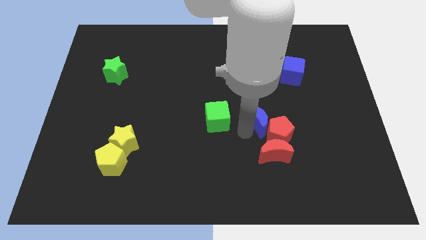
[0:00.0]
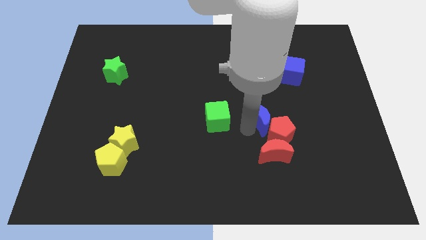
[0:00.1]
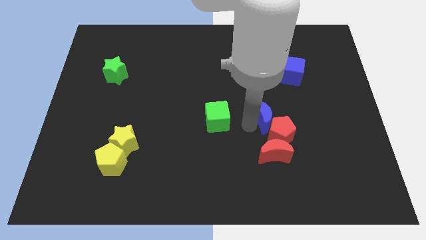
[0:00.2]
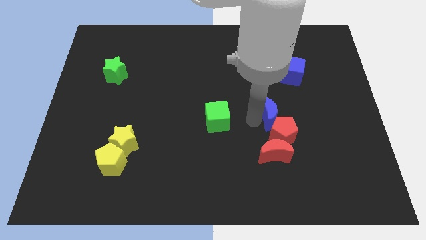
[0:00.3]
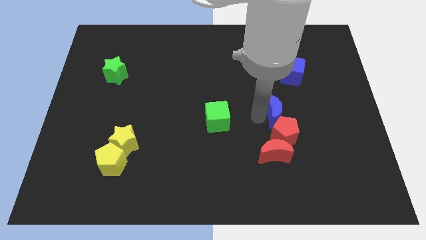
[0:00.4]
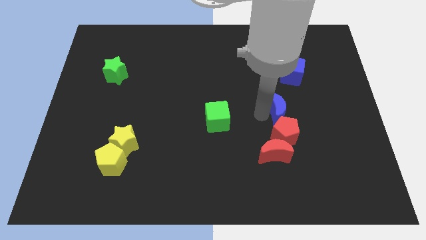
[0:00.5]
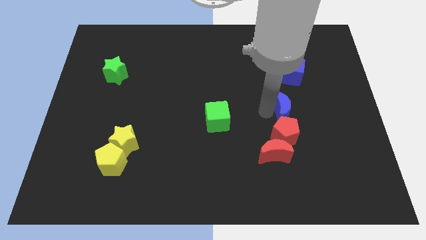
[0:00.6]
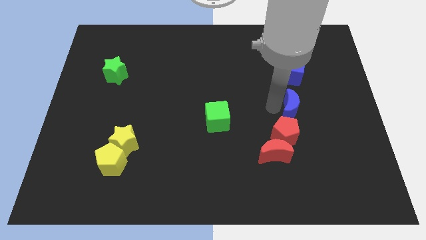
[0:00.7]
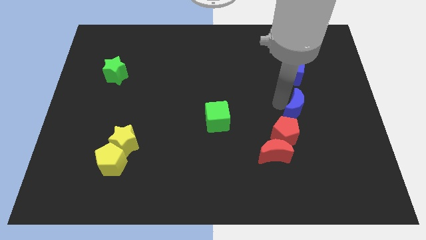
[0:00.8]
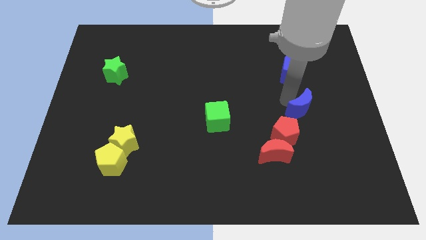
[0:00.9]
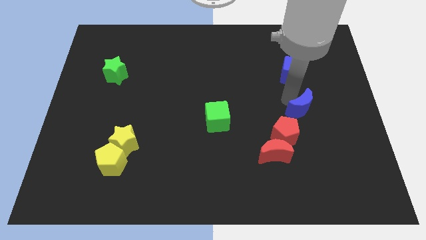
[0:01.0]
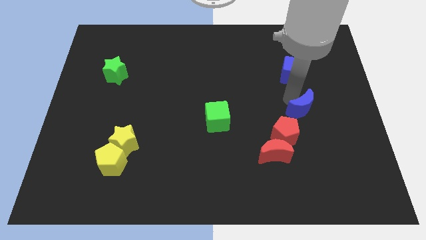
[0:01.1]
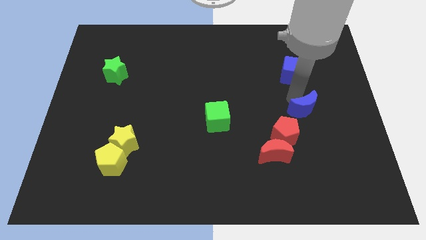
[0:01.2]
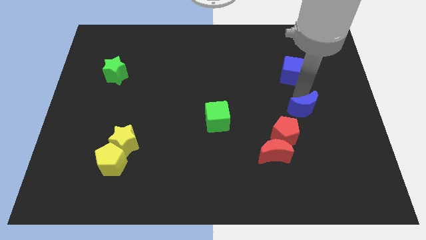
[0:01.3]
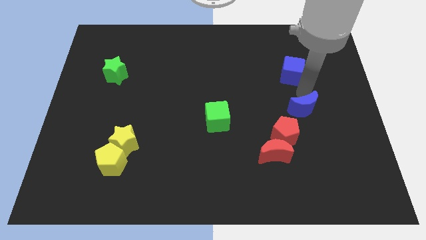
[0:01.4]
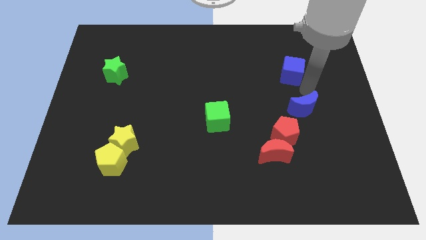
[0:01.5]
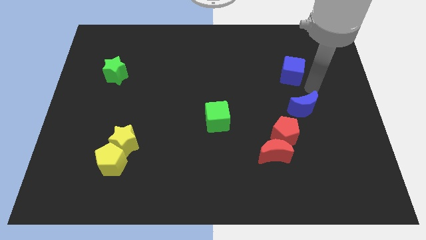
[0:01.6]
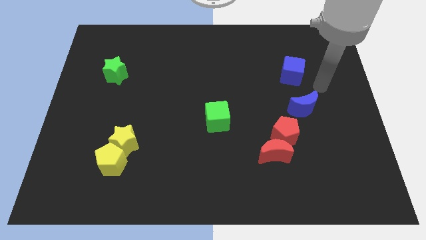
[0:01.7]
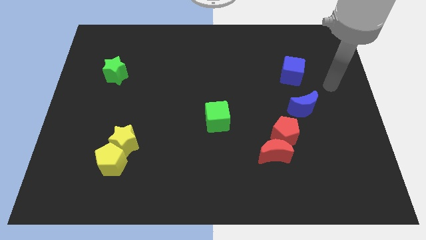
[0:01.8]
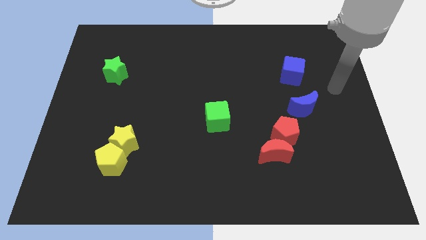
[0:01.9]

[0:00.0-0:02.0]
move the blue crescent towards right

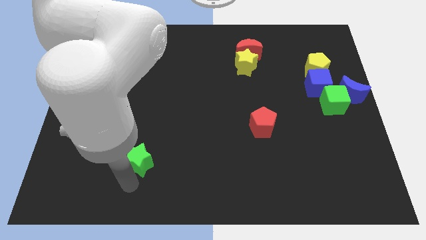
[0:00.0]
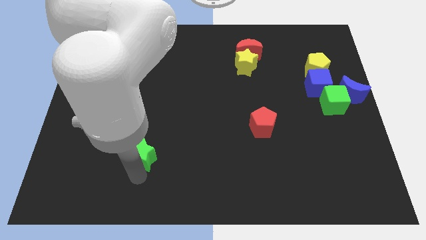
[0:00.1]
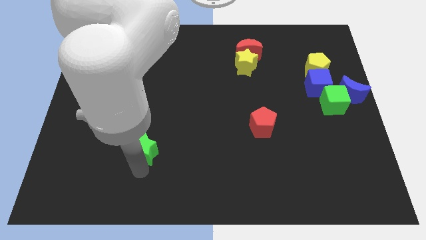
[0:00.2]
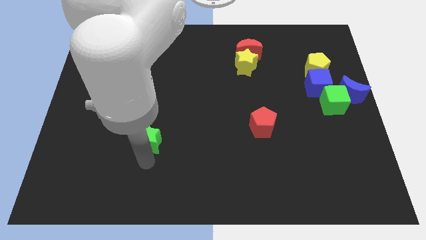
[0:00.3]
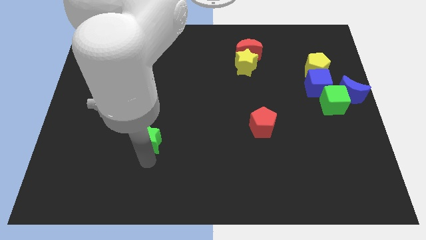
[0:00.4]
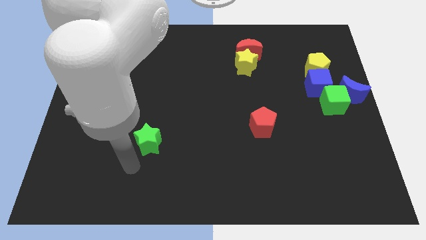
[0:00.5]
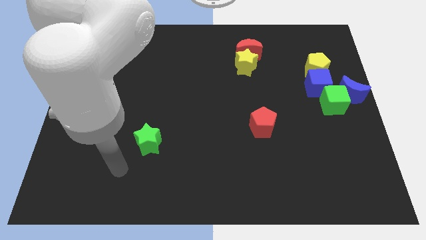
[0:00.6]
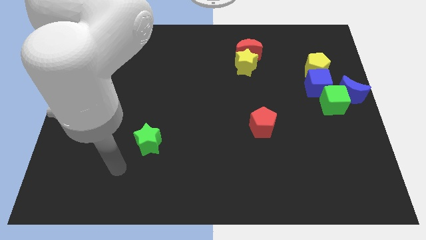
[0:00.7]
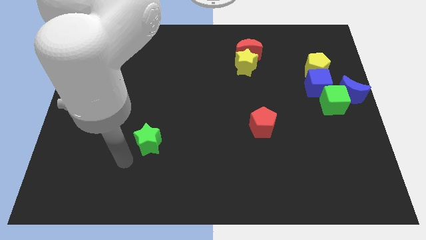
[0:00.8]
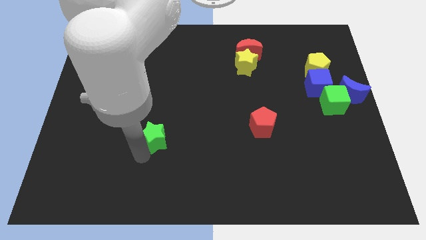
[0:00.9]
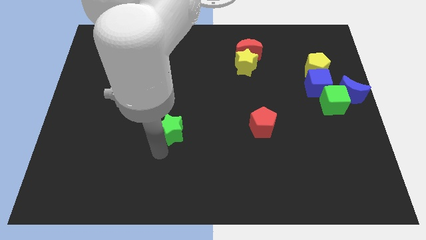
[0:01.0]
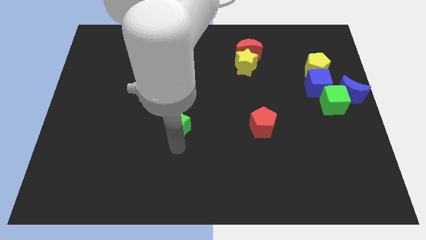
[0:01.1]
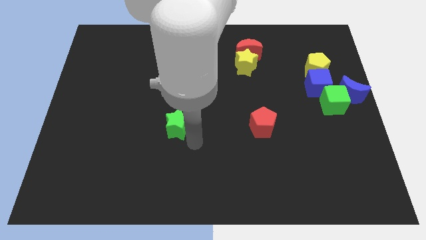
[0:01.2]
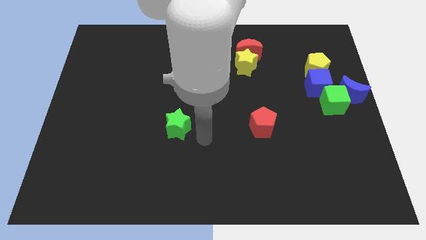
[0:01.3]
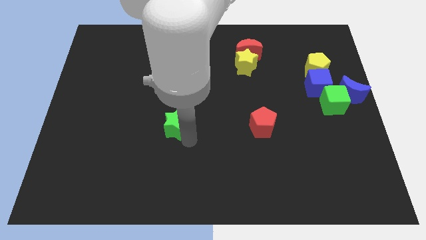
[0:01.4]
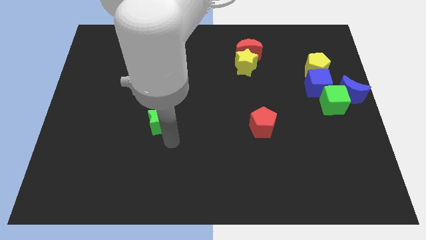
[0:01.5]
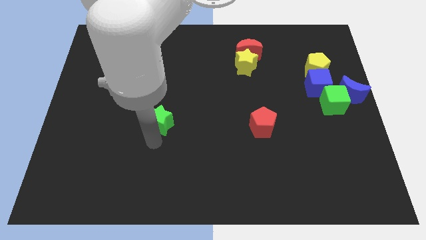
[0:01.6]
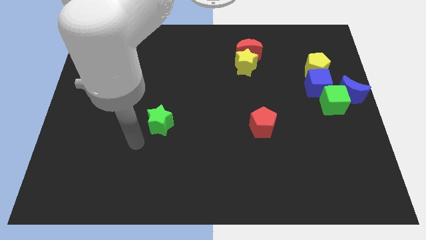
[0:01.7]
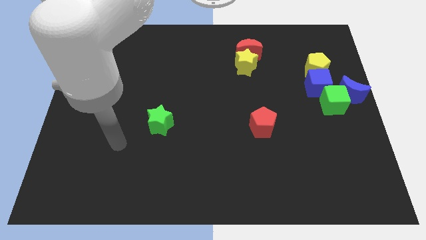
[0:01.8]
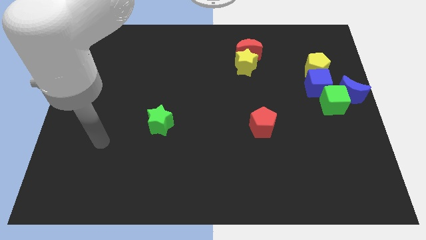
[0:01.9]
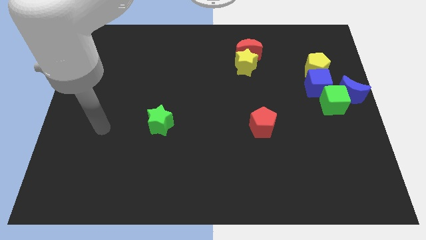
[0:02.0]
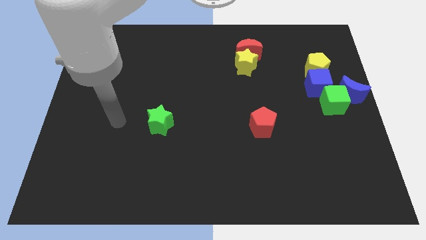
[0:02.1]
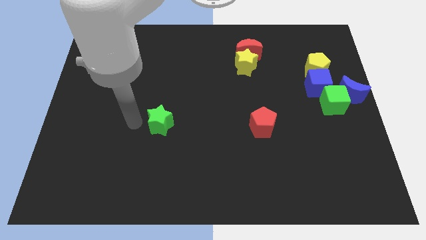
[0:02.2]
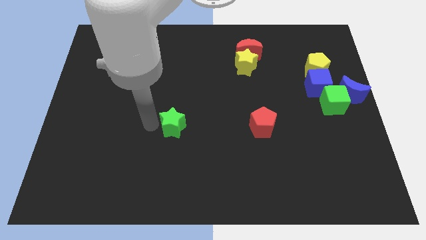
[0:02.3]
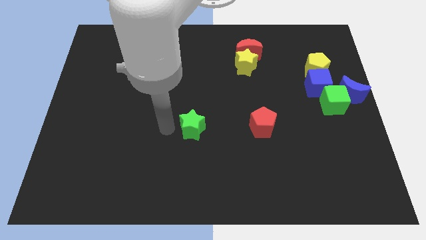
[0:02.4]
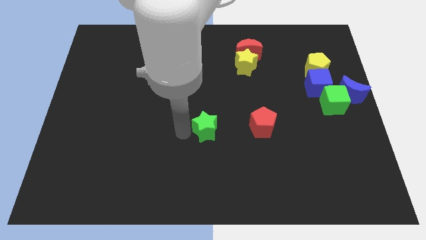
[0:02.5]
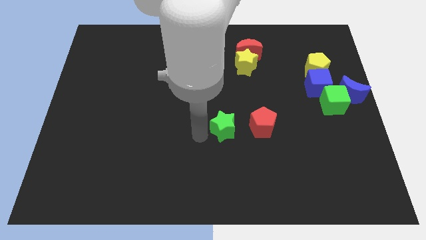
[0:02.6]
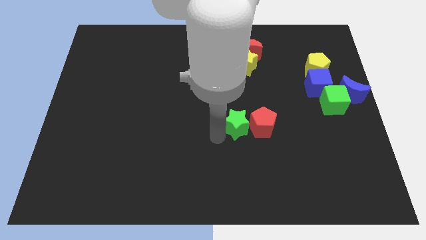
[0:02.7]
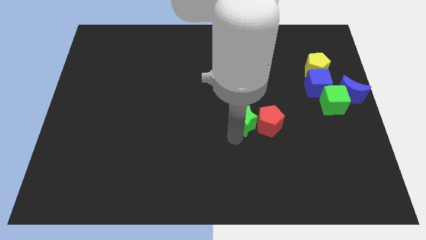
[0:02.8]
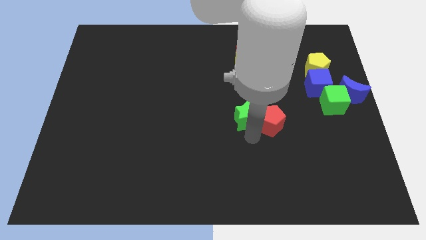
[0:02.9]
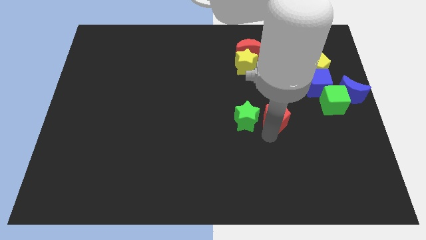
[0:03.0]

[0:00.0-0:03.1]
push the green star into left of red pentagon

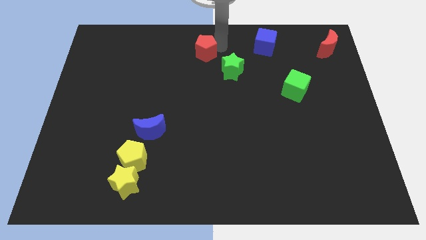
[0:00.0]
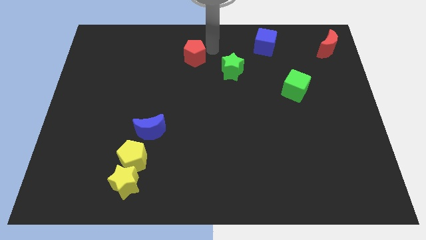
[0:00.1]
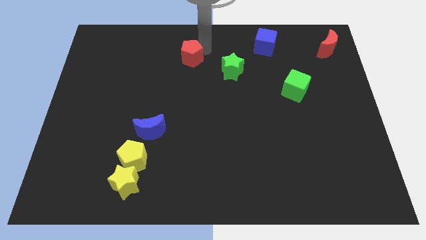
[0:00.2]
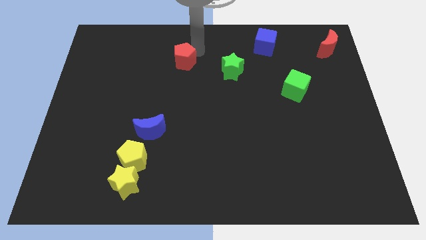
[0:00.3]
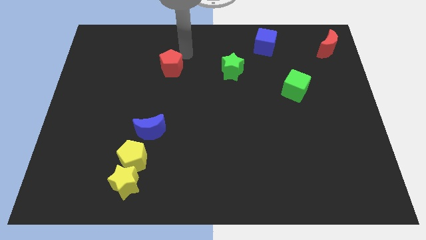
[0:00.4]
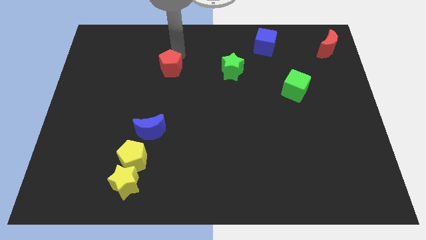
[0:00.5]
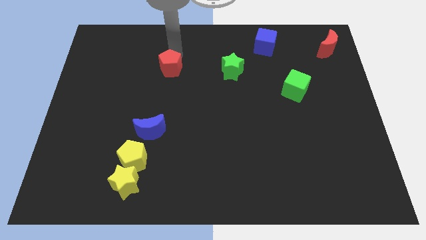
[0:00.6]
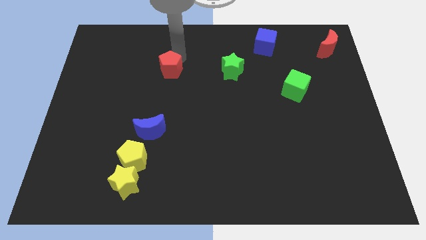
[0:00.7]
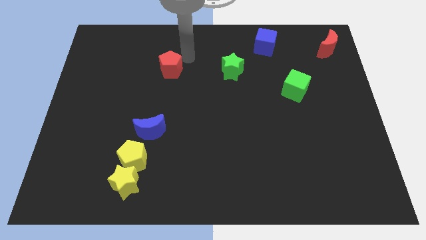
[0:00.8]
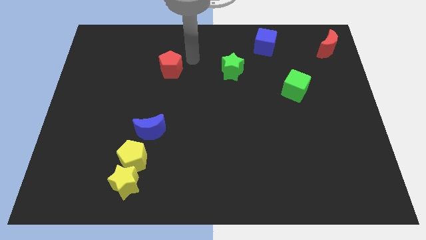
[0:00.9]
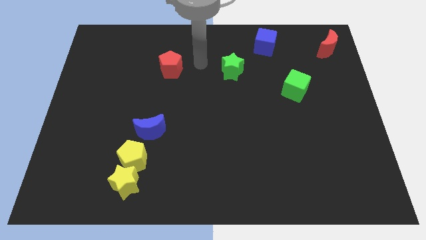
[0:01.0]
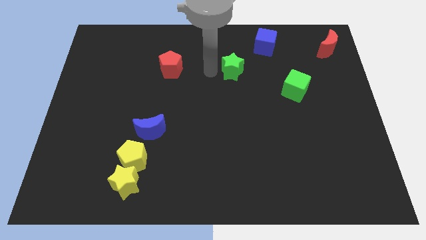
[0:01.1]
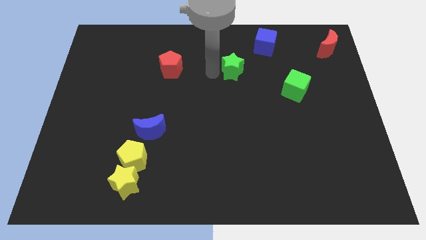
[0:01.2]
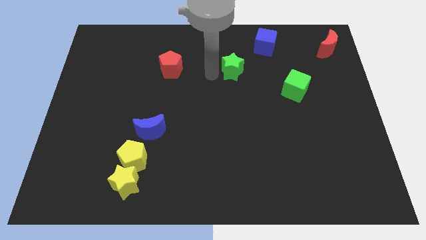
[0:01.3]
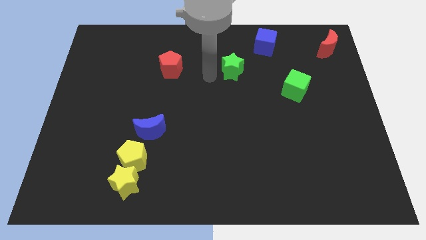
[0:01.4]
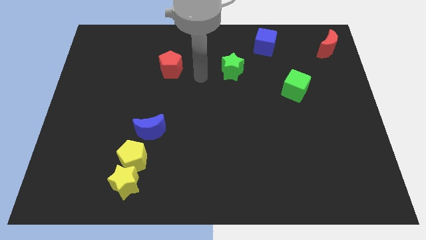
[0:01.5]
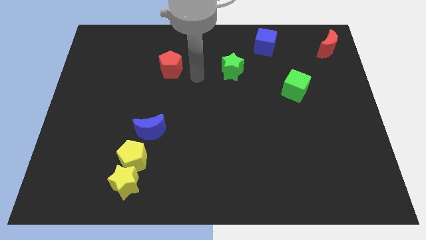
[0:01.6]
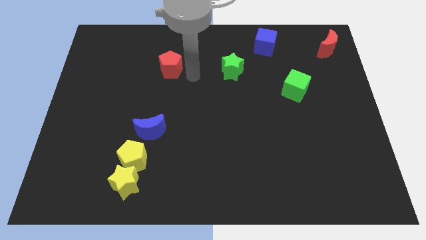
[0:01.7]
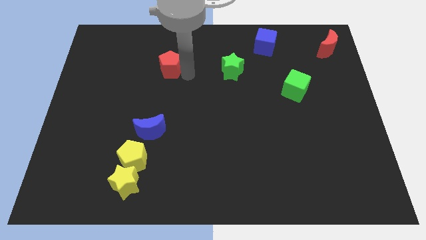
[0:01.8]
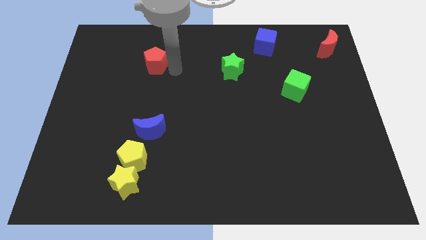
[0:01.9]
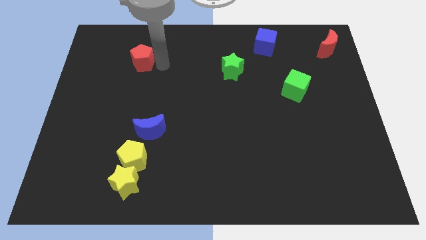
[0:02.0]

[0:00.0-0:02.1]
move the red pentagon vertically to the blue moon

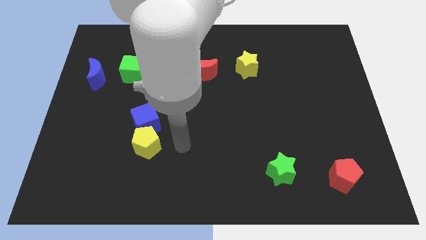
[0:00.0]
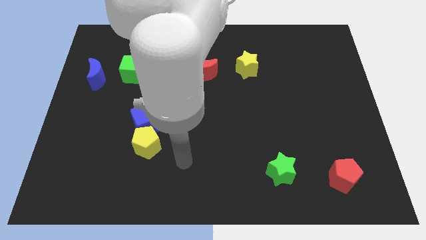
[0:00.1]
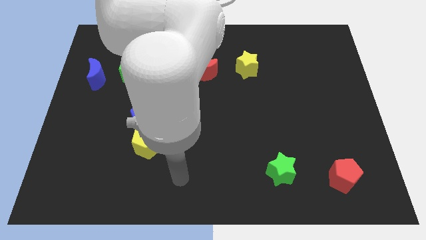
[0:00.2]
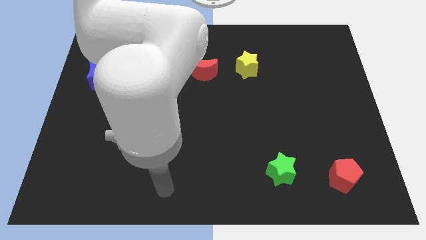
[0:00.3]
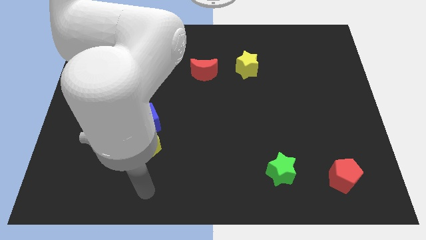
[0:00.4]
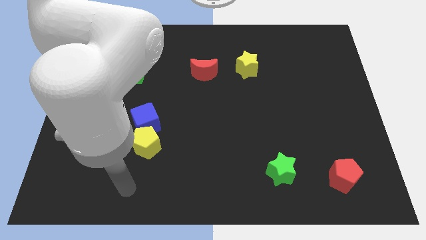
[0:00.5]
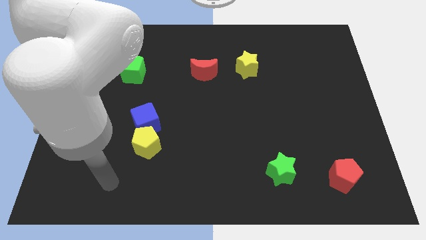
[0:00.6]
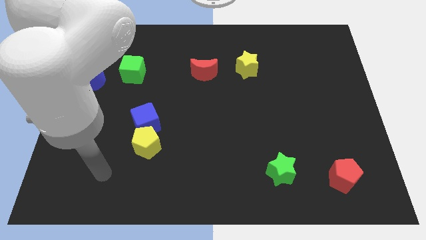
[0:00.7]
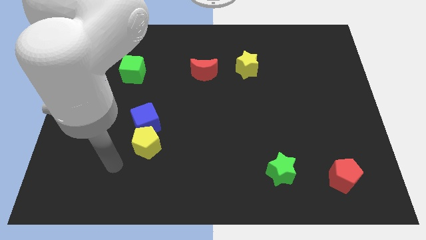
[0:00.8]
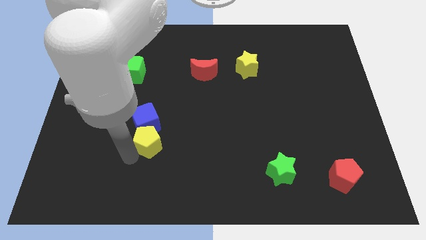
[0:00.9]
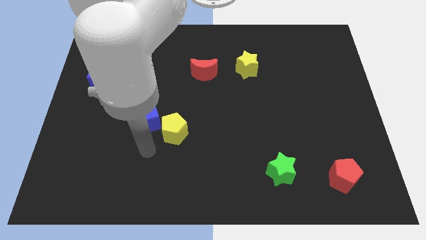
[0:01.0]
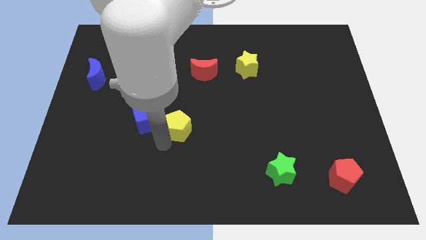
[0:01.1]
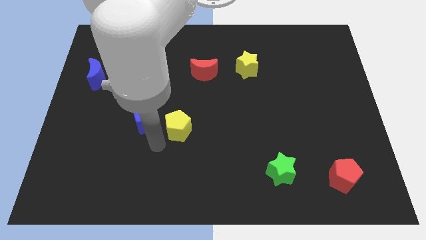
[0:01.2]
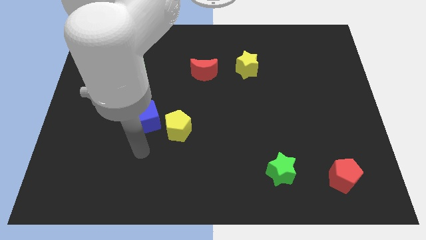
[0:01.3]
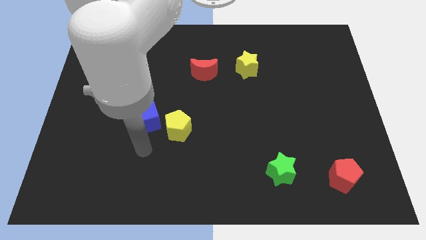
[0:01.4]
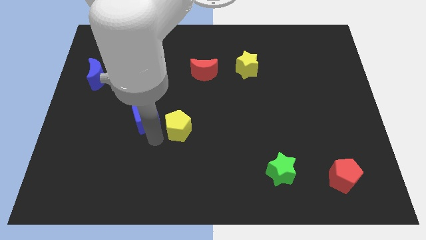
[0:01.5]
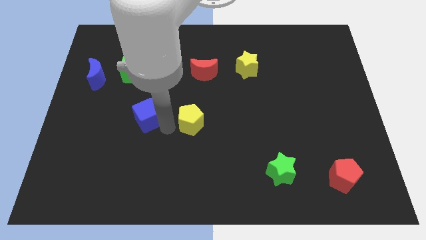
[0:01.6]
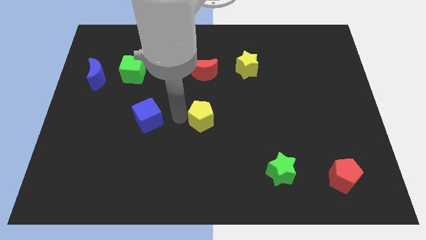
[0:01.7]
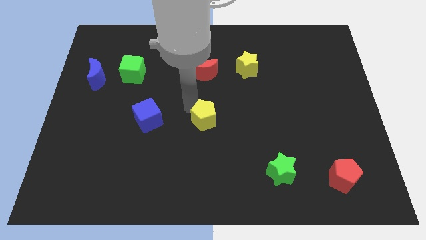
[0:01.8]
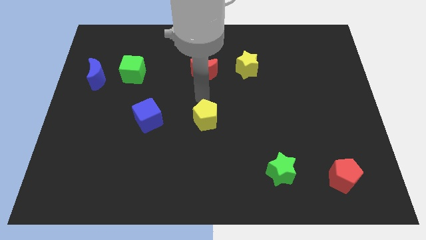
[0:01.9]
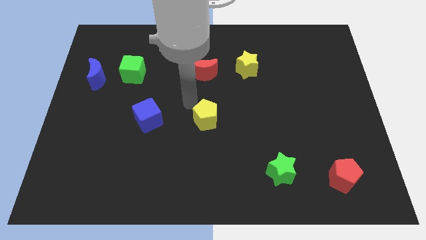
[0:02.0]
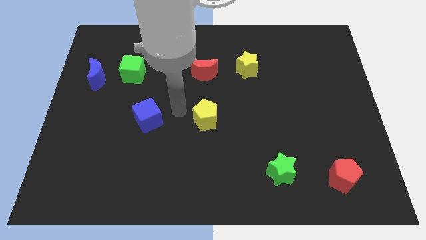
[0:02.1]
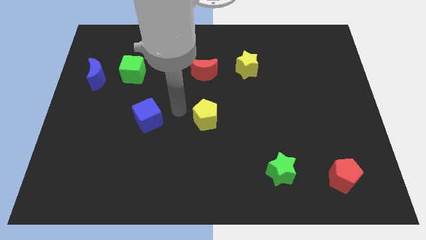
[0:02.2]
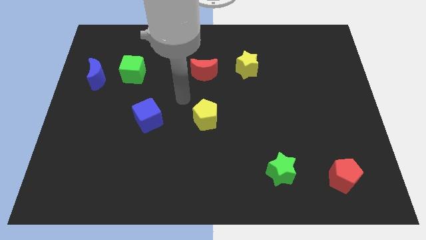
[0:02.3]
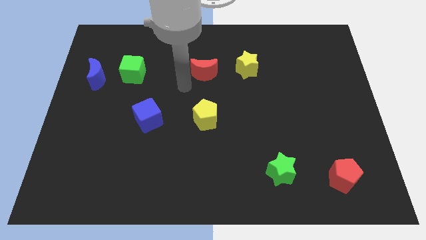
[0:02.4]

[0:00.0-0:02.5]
move the yellow pentagon to the vertical bottom side of the red moon
